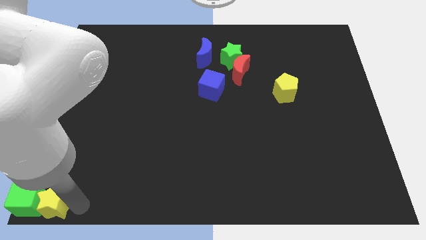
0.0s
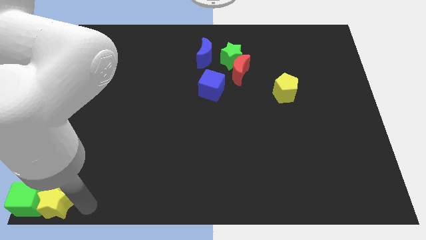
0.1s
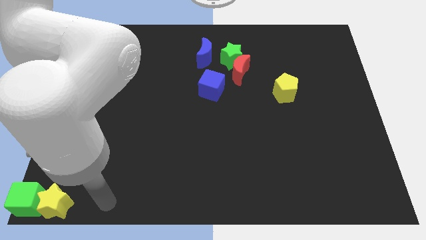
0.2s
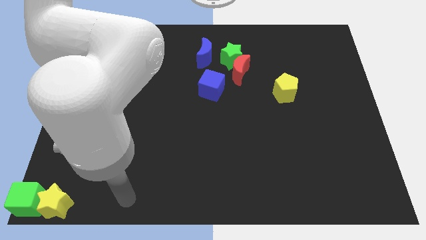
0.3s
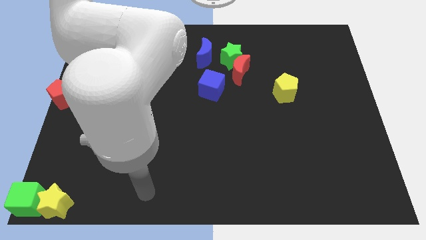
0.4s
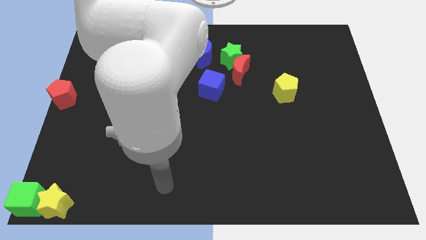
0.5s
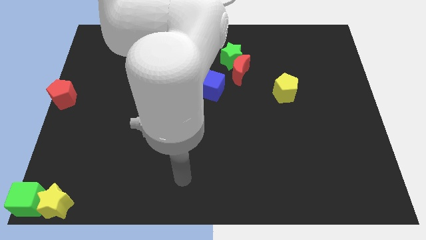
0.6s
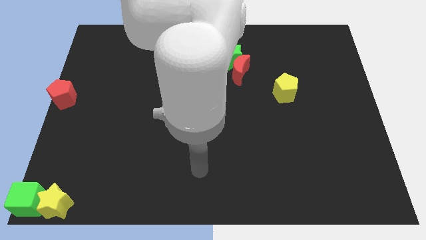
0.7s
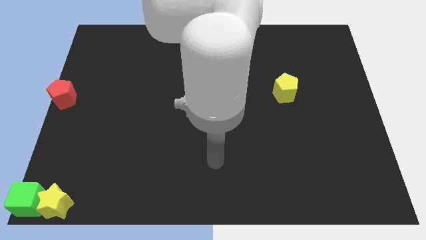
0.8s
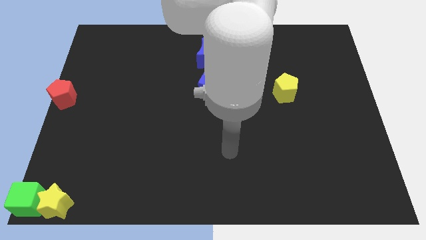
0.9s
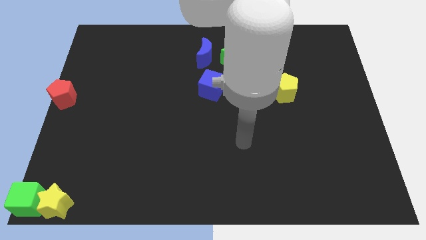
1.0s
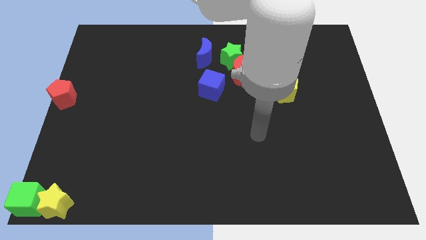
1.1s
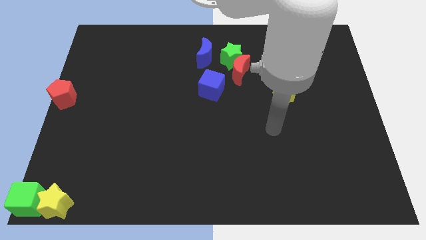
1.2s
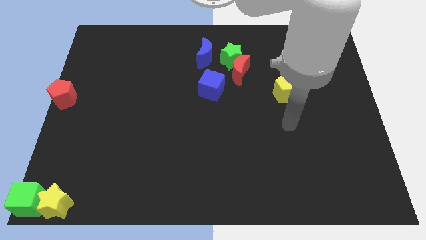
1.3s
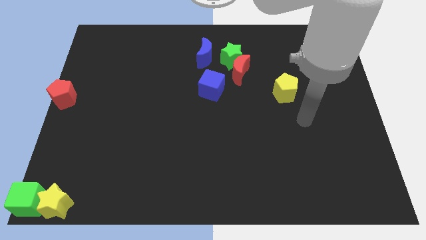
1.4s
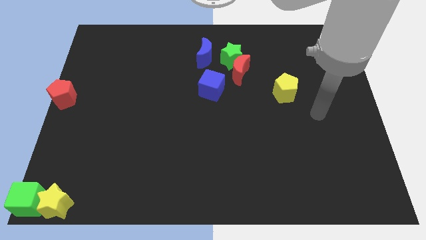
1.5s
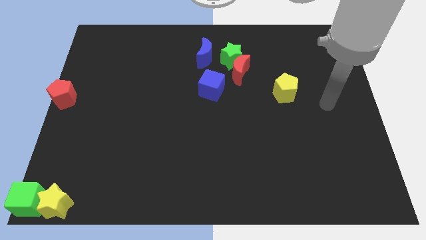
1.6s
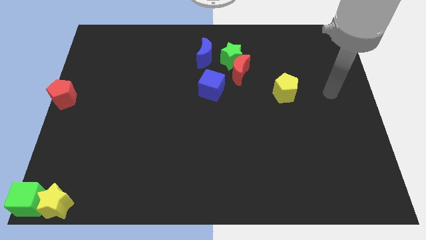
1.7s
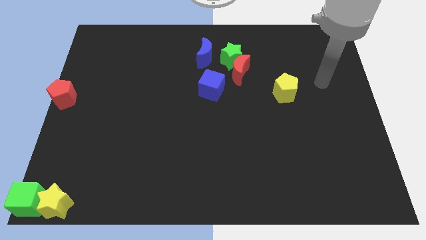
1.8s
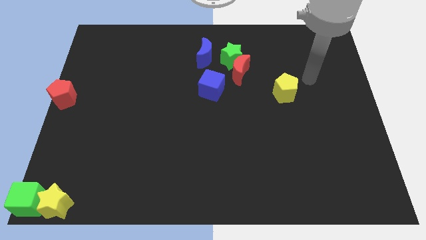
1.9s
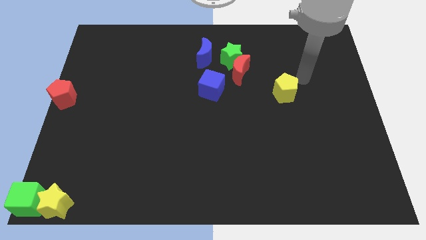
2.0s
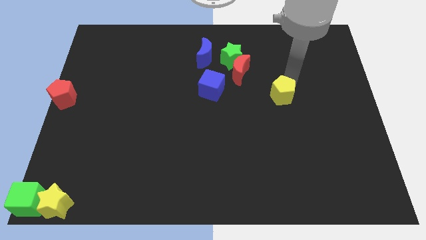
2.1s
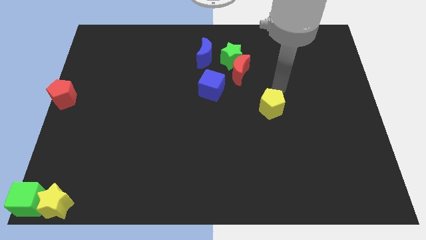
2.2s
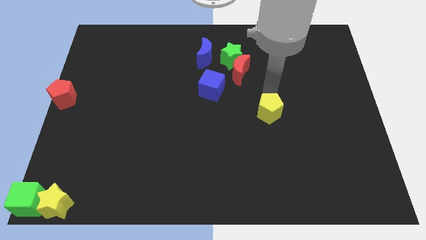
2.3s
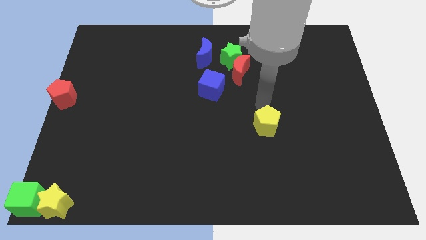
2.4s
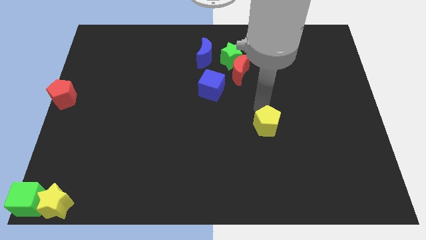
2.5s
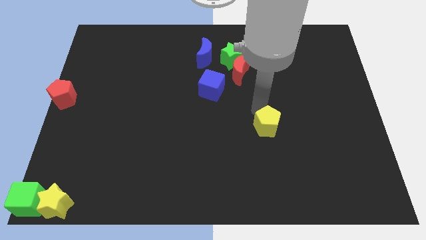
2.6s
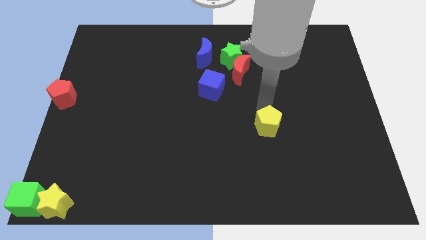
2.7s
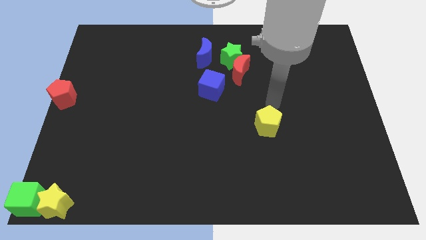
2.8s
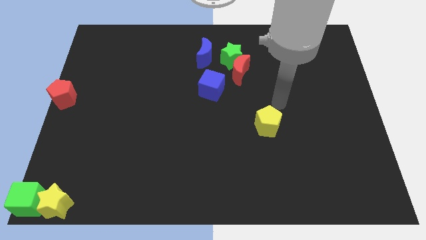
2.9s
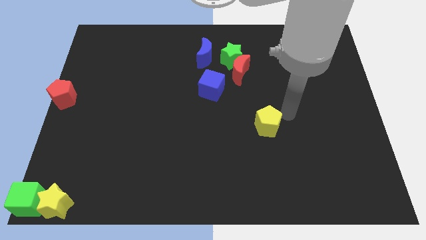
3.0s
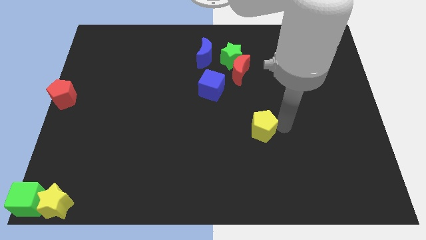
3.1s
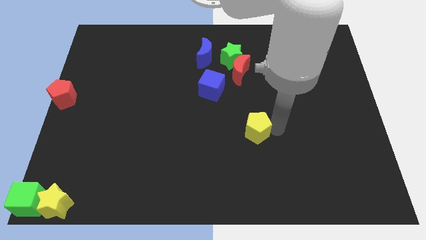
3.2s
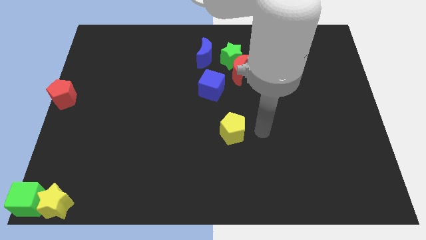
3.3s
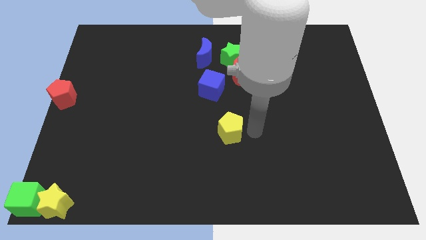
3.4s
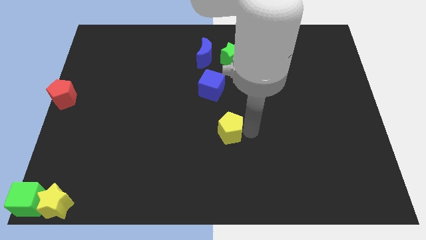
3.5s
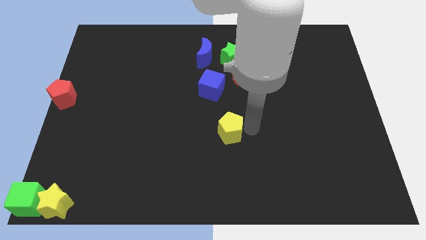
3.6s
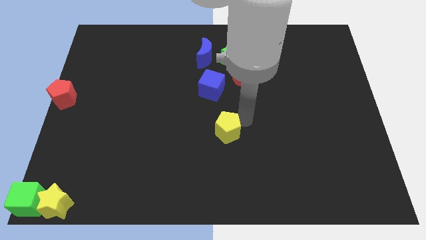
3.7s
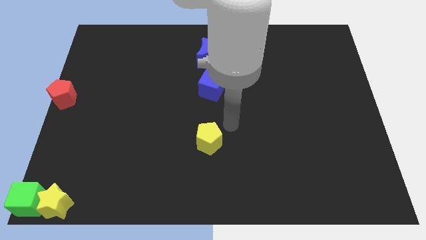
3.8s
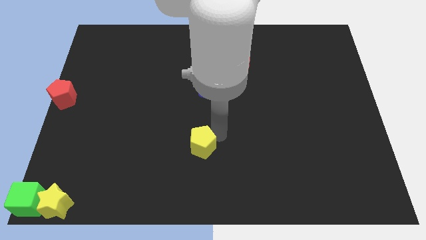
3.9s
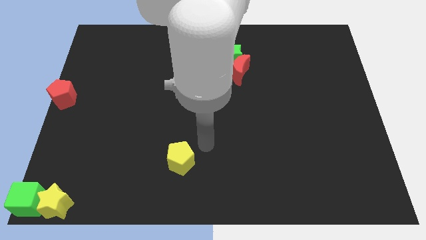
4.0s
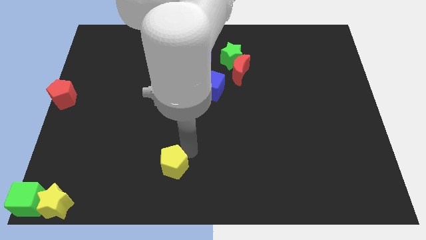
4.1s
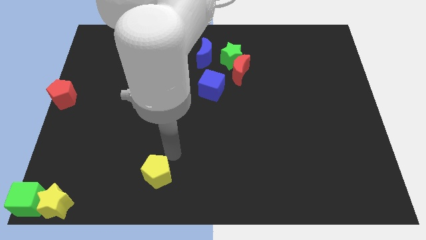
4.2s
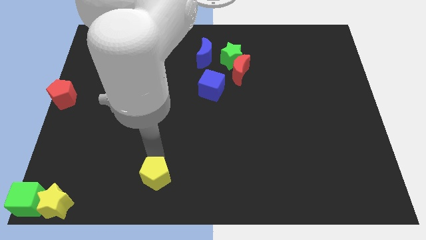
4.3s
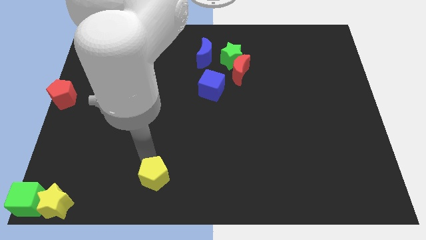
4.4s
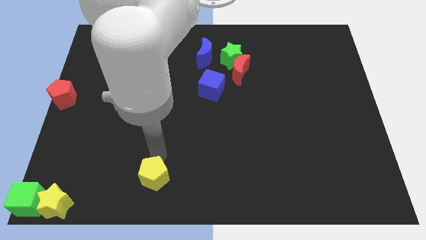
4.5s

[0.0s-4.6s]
push the yellow pentagon towards the bottom side of the board

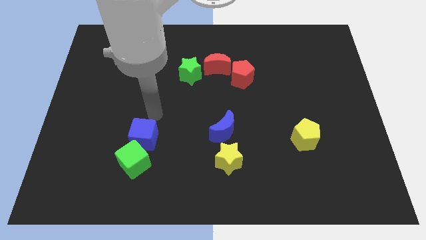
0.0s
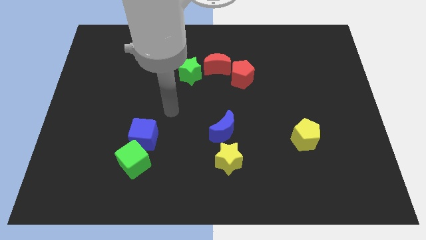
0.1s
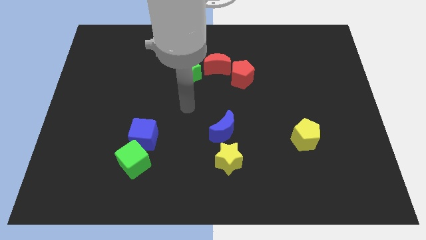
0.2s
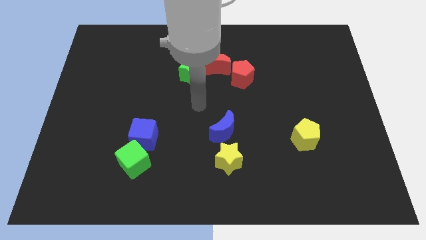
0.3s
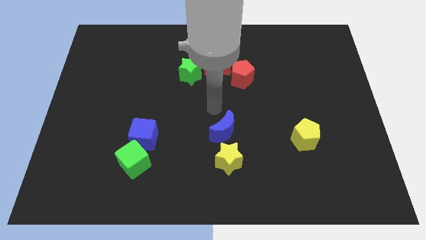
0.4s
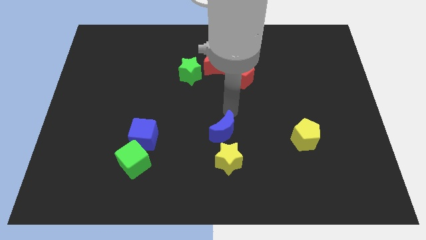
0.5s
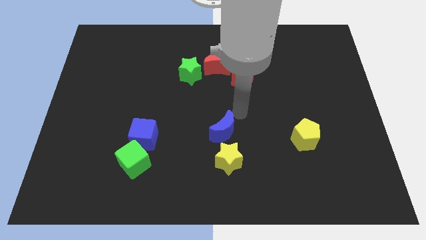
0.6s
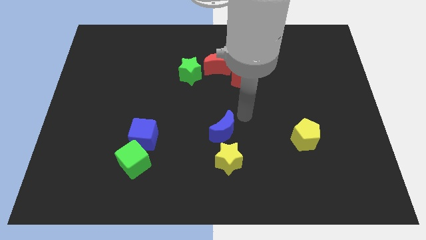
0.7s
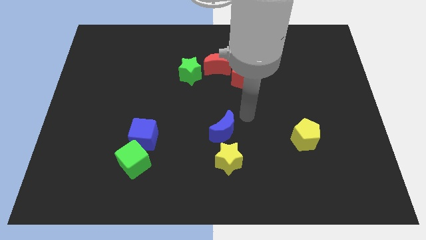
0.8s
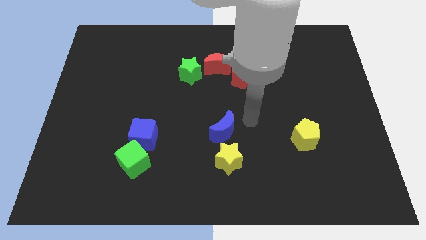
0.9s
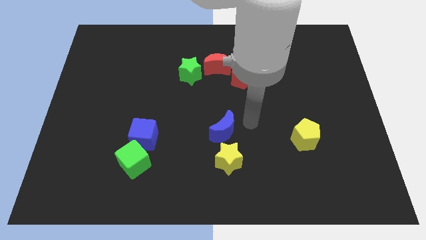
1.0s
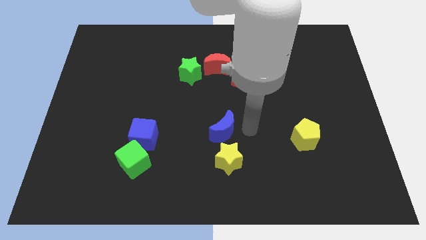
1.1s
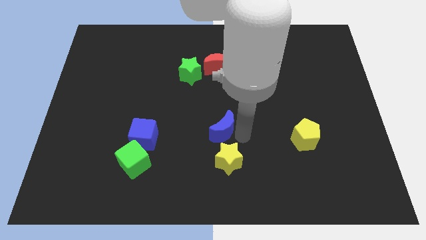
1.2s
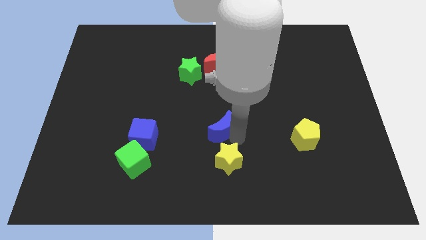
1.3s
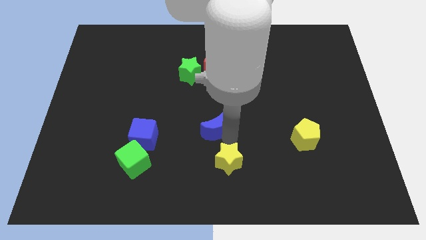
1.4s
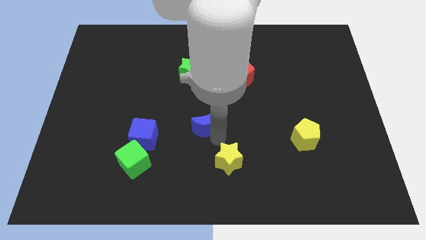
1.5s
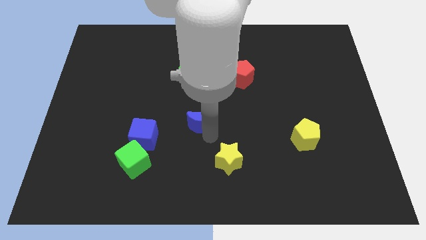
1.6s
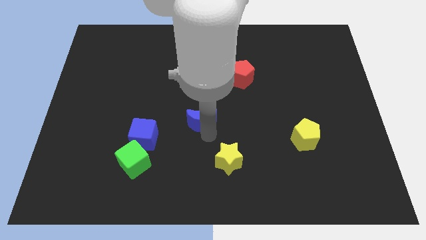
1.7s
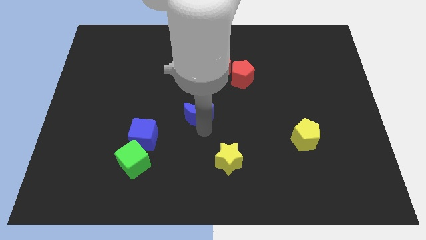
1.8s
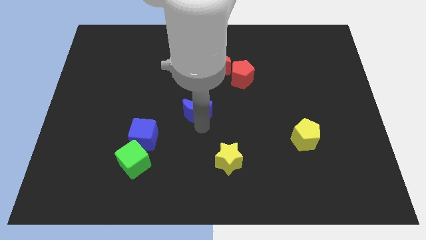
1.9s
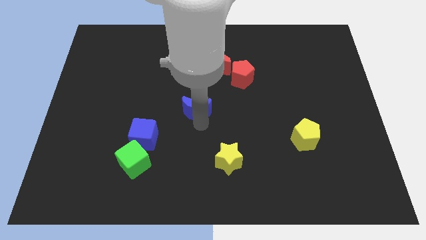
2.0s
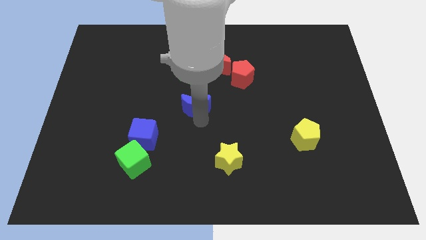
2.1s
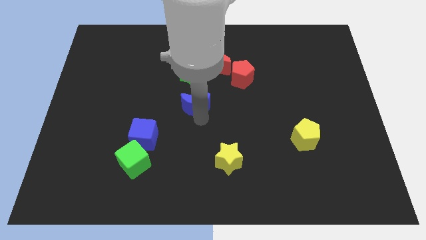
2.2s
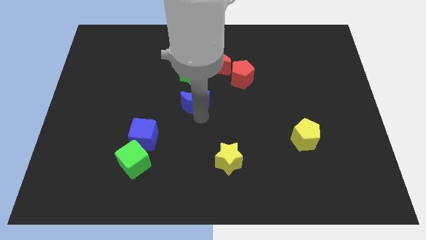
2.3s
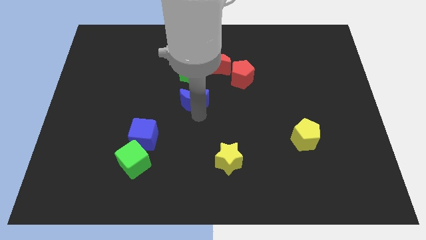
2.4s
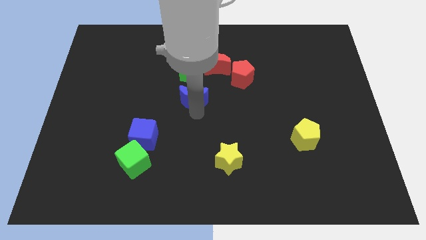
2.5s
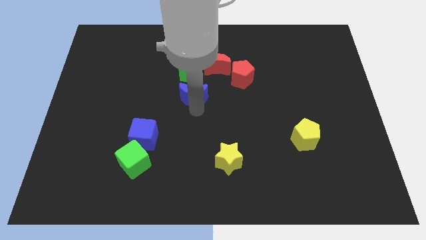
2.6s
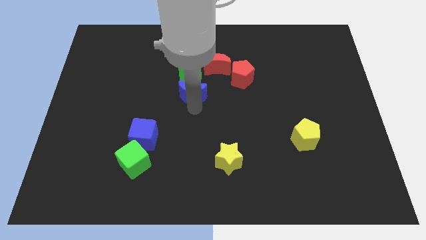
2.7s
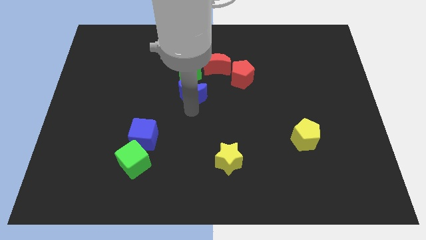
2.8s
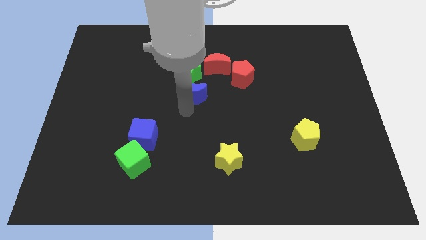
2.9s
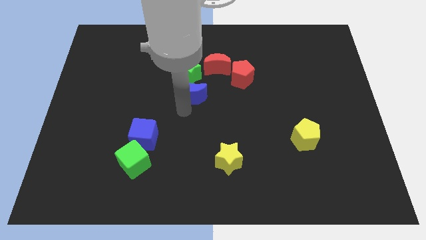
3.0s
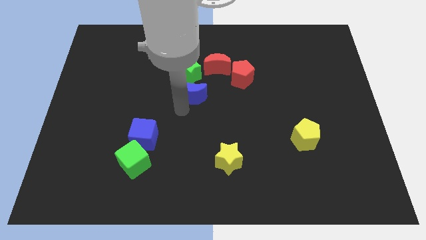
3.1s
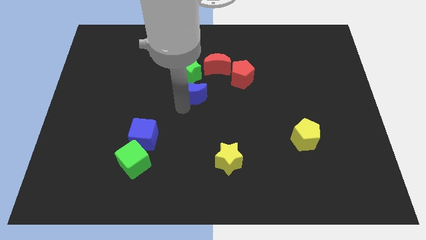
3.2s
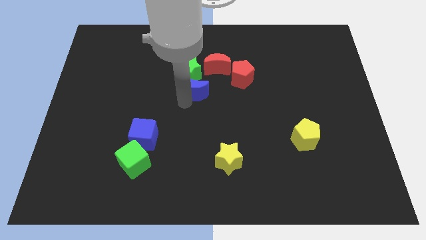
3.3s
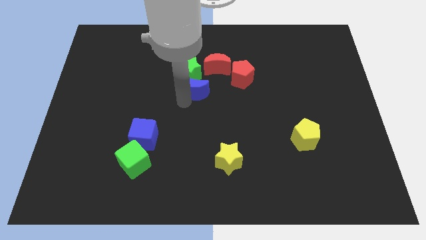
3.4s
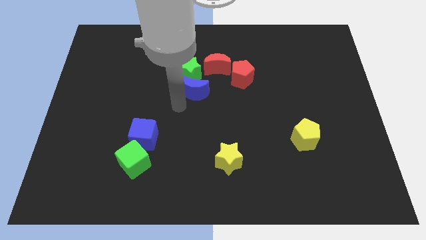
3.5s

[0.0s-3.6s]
move the blue crescent towards the green star

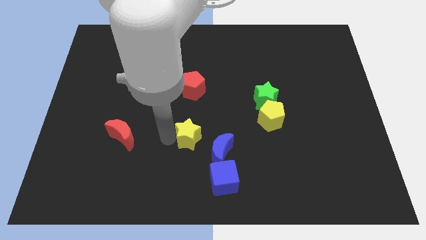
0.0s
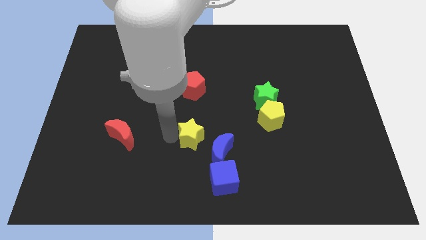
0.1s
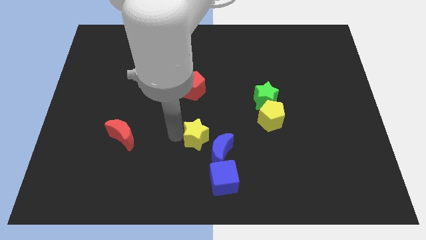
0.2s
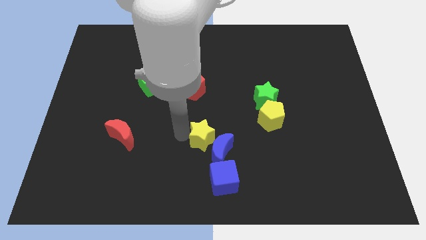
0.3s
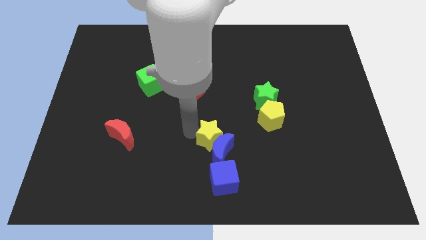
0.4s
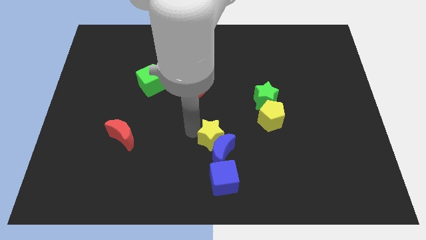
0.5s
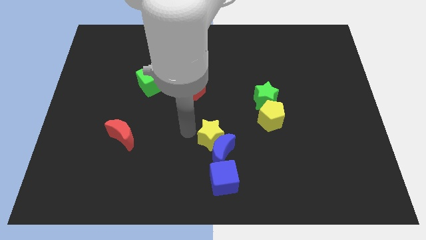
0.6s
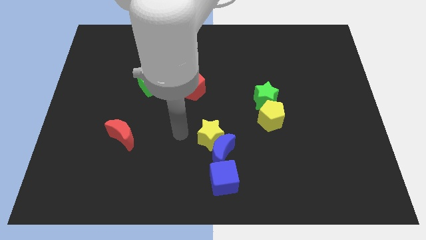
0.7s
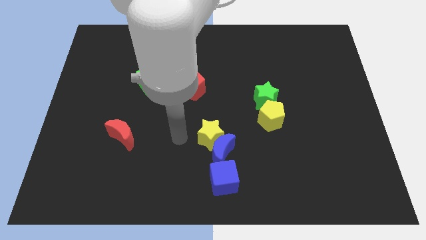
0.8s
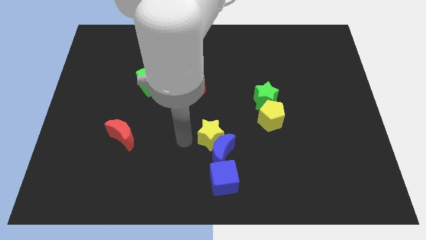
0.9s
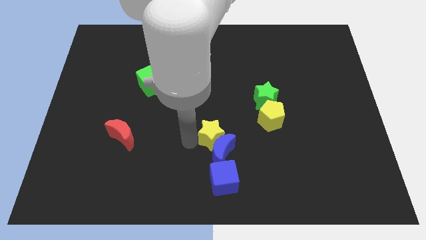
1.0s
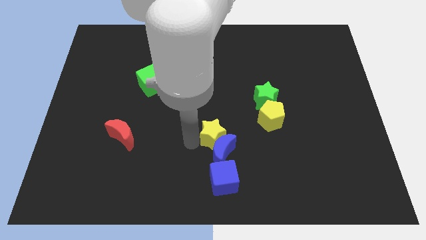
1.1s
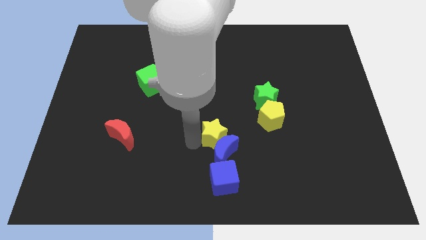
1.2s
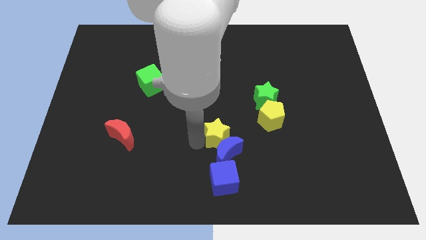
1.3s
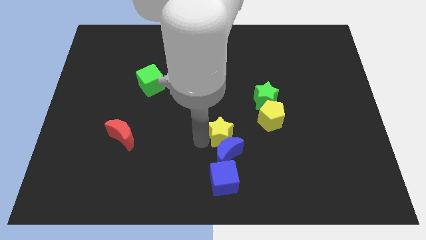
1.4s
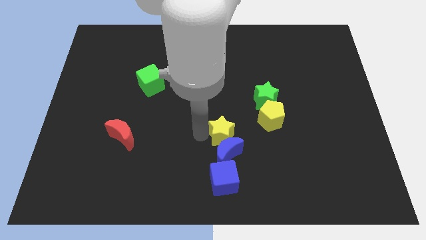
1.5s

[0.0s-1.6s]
push the yellow star to the top of the blue crescent
